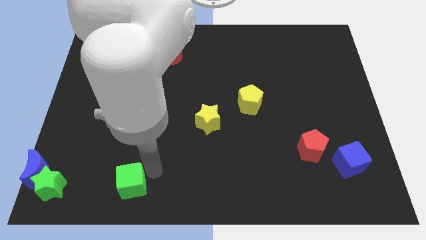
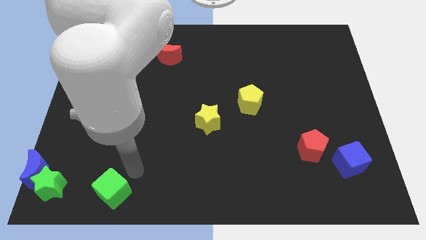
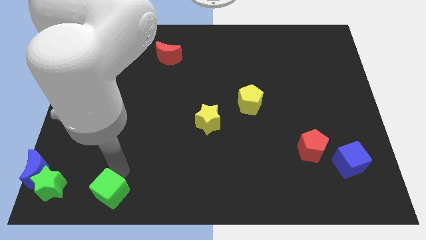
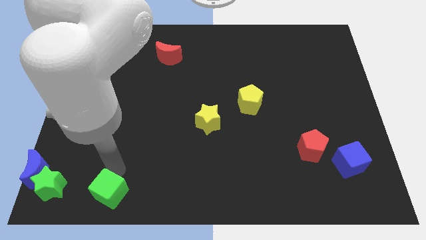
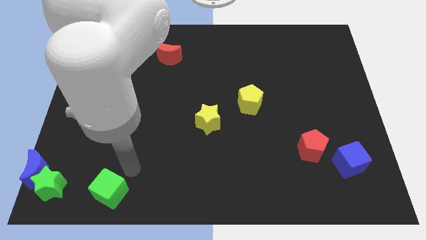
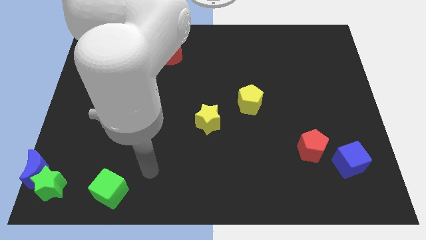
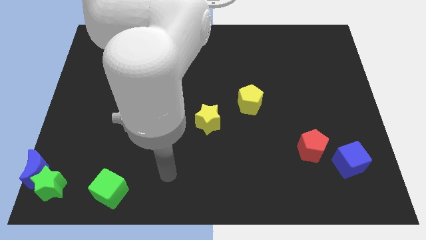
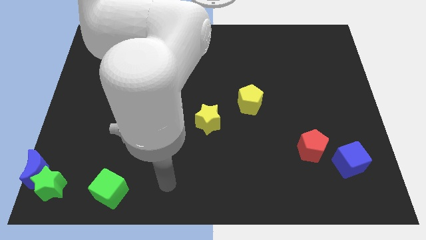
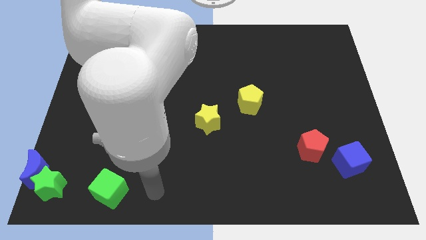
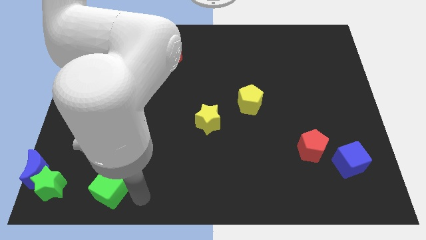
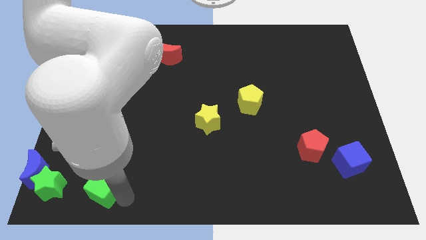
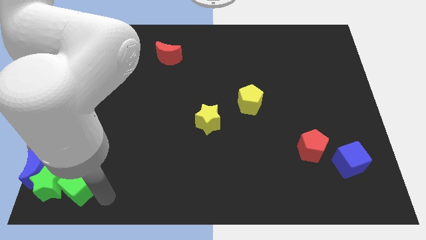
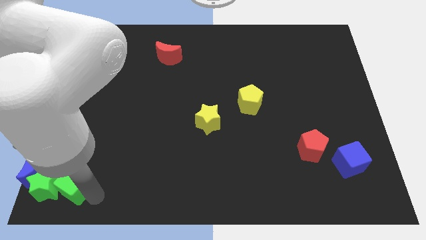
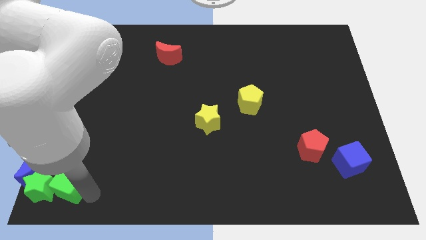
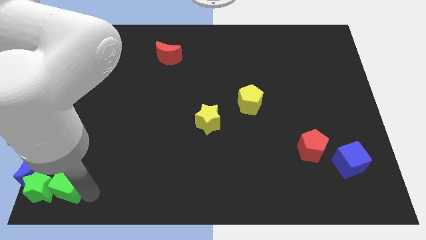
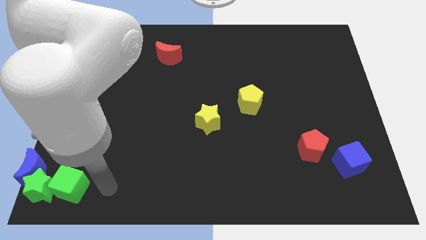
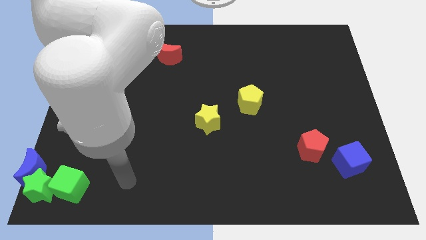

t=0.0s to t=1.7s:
move the green cube right to the green star

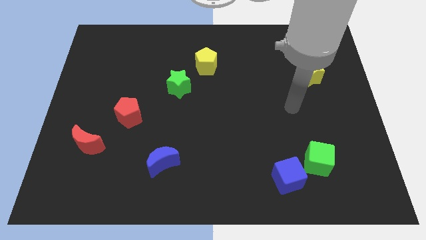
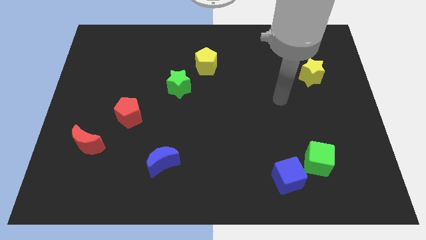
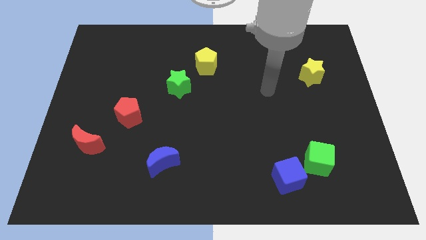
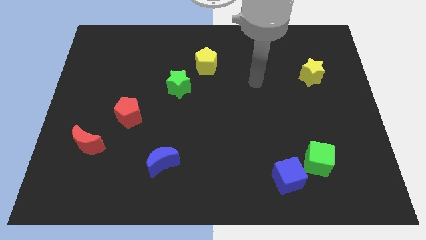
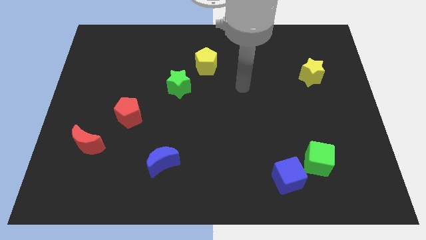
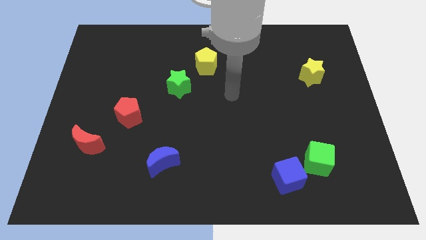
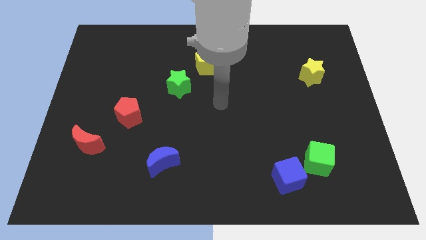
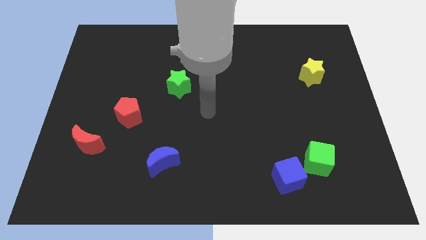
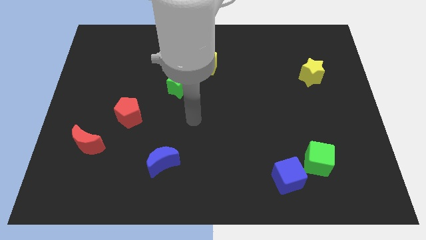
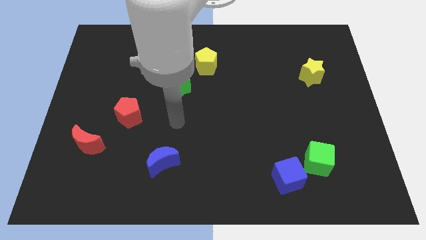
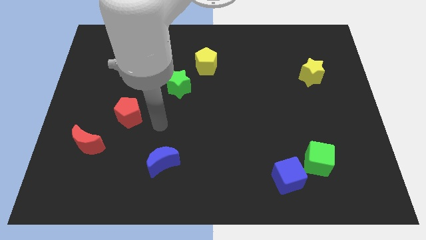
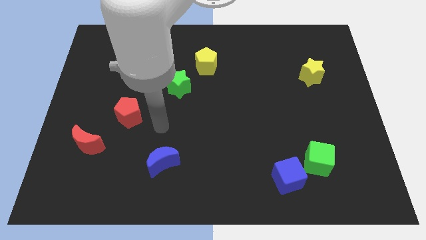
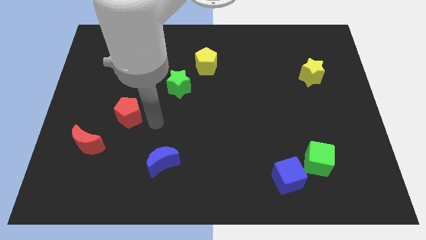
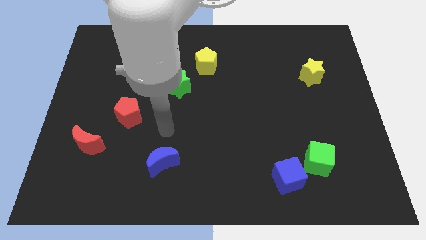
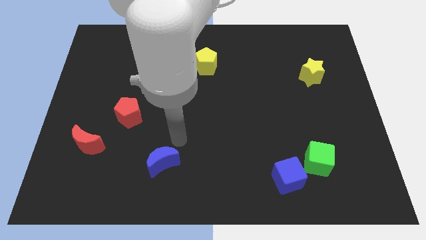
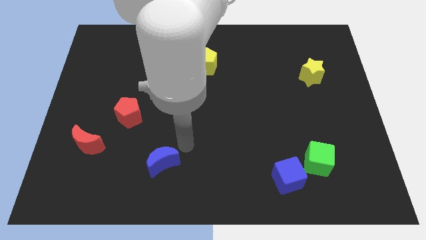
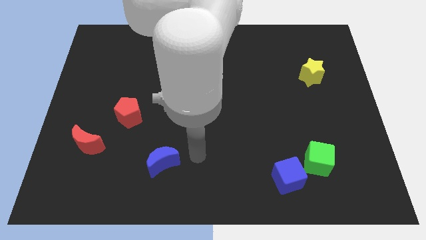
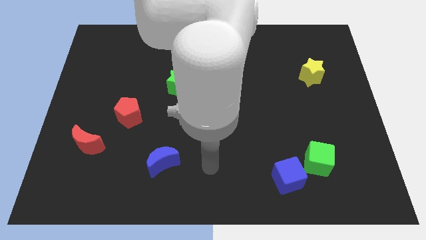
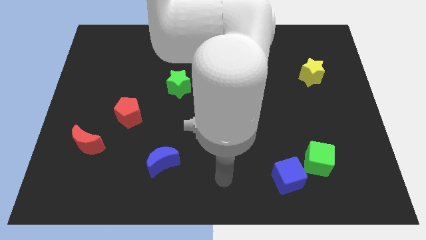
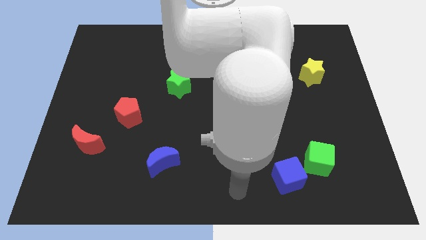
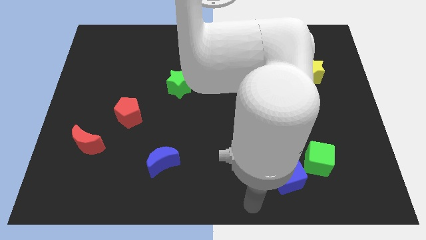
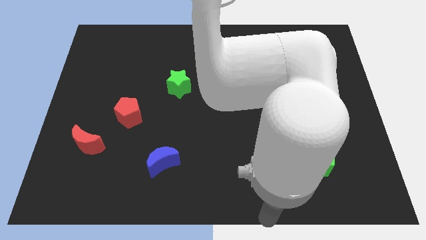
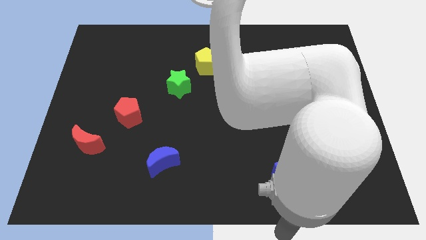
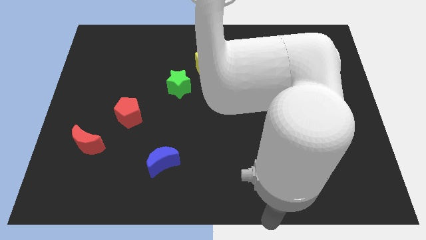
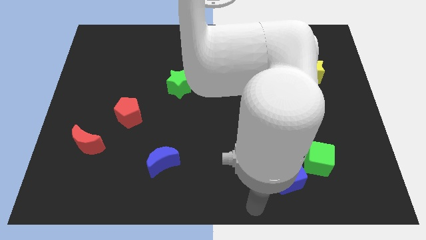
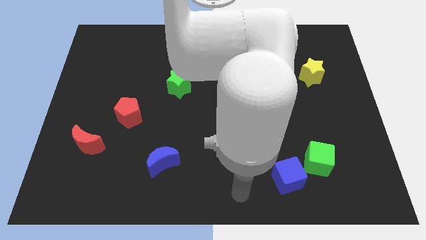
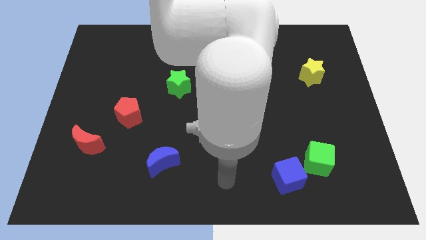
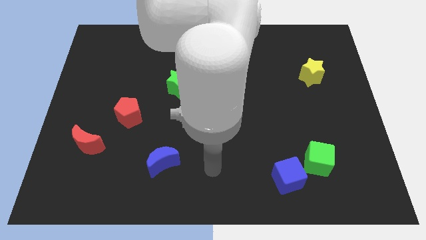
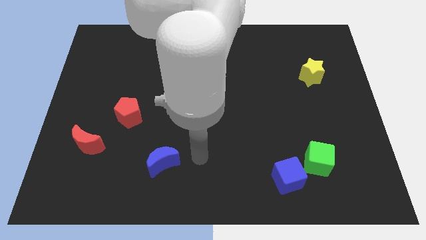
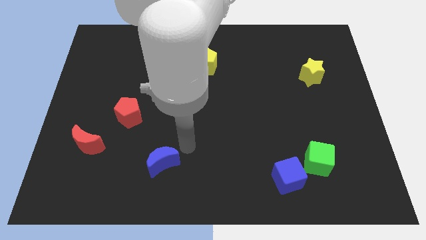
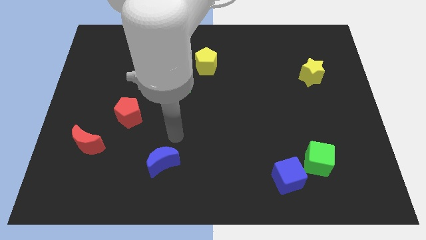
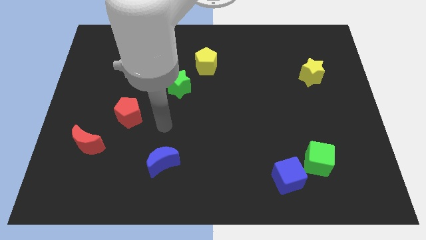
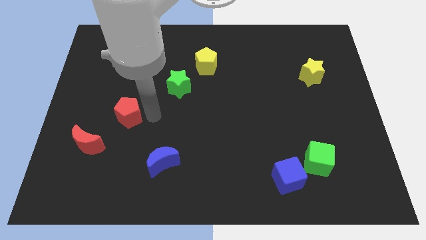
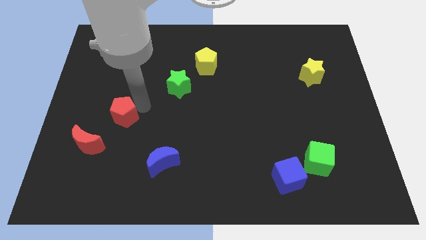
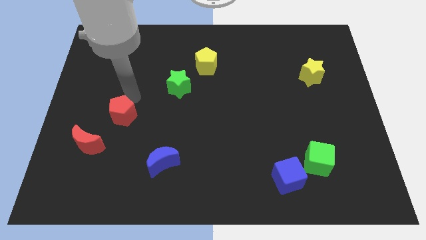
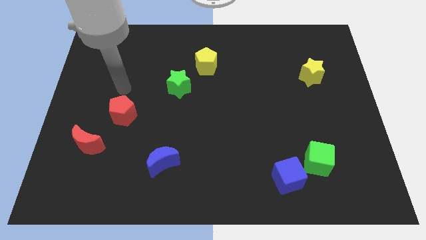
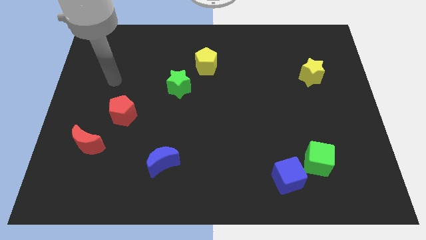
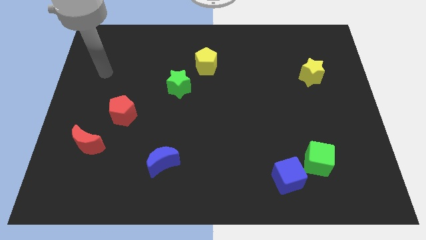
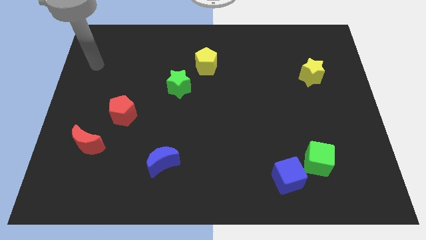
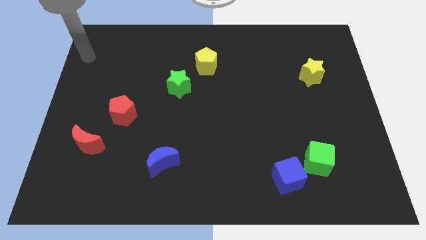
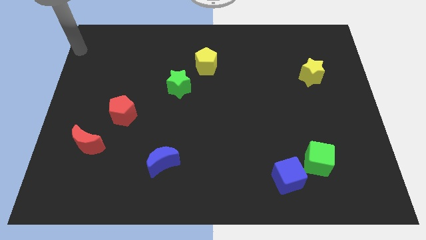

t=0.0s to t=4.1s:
move your arm to the top left corner

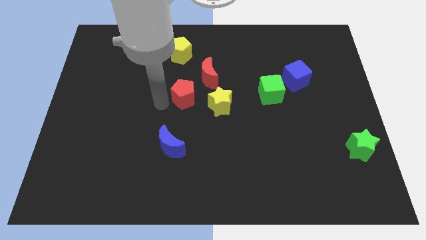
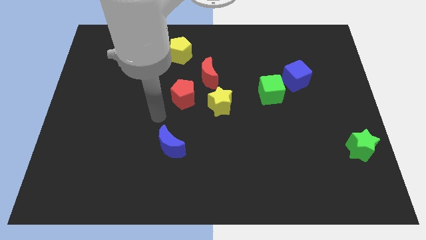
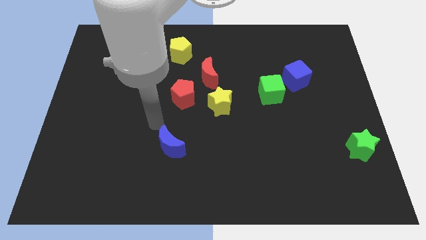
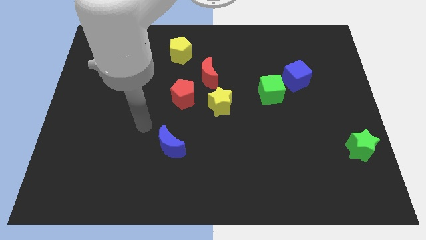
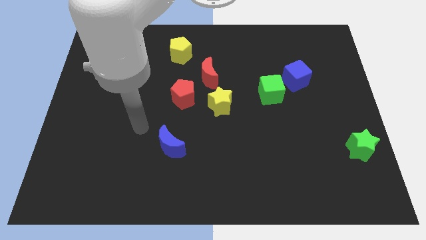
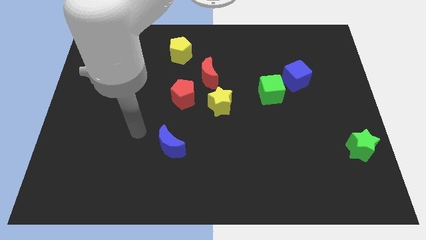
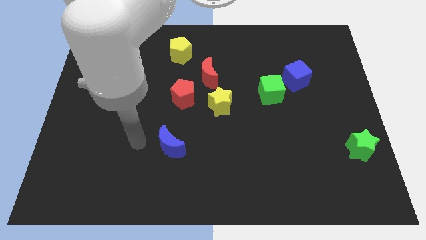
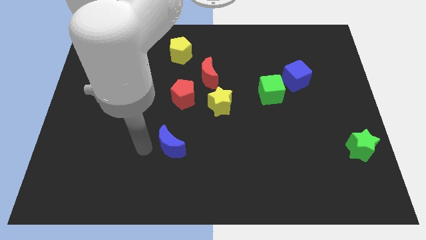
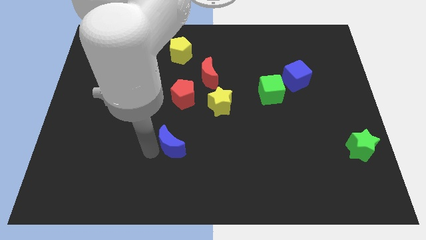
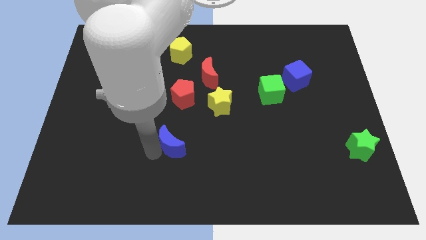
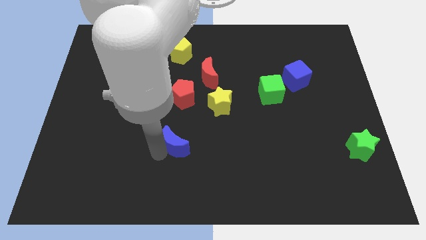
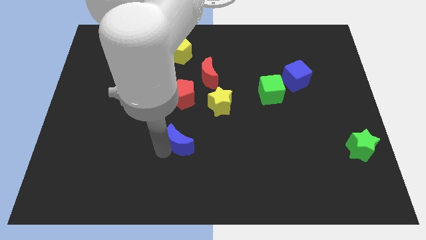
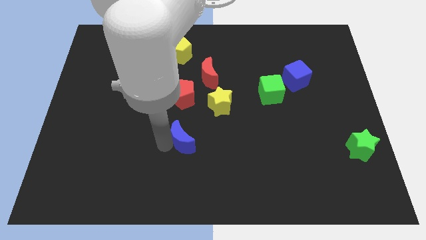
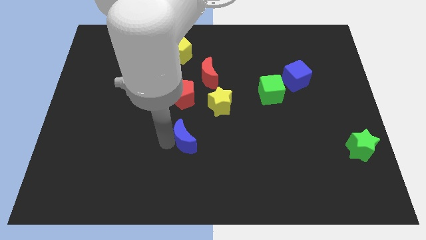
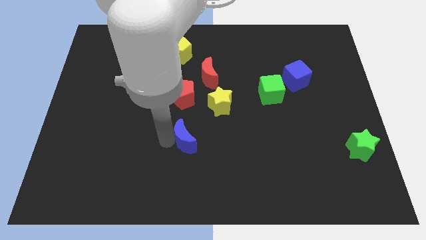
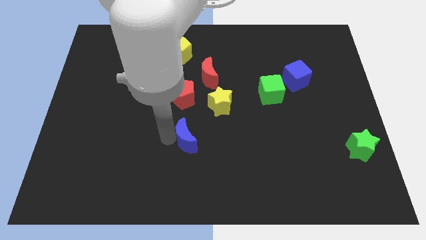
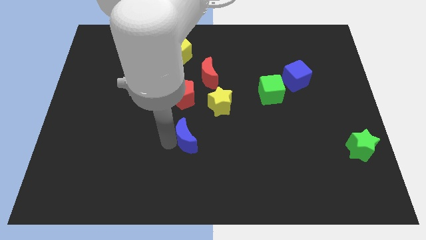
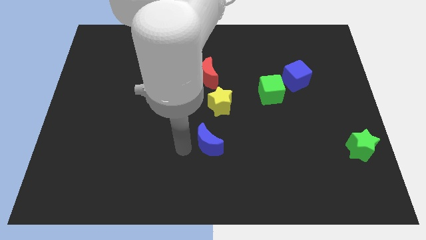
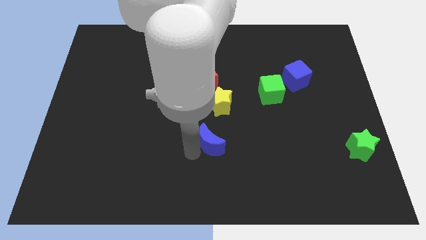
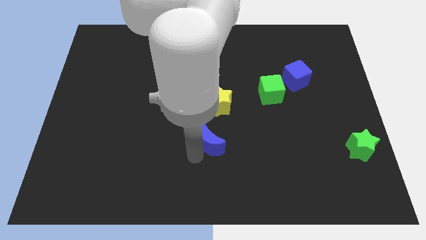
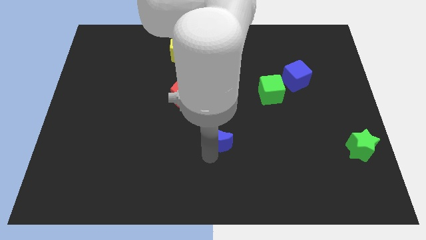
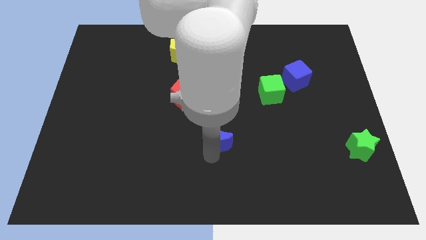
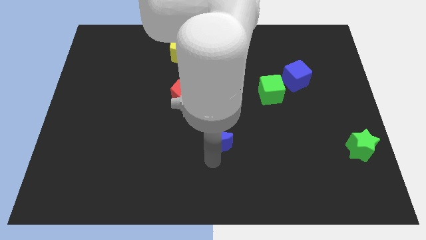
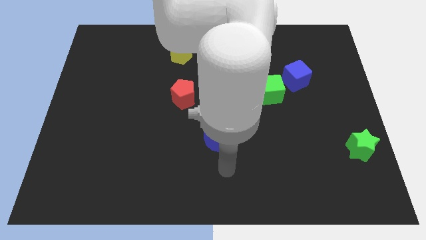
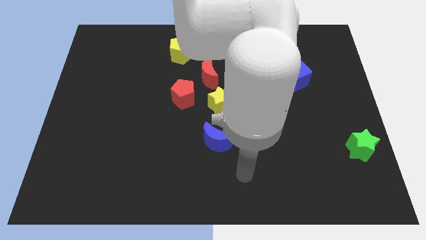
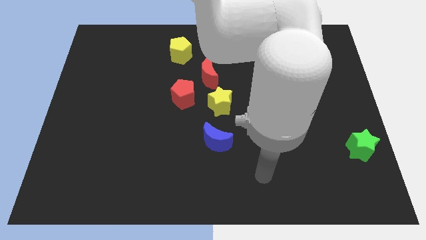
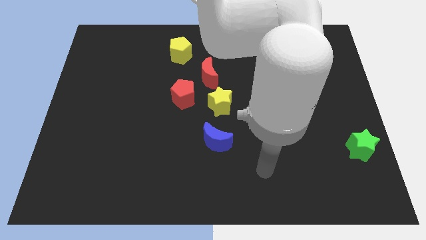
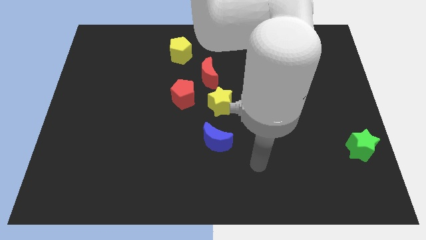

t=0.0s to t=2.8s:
push the blue crescent to the bottom of the yellow star

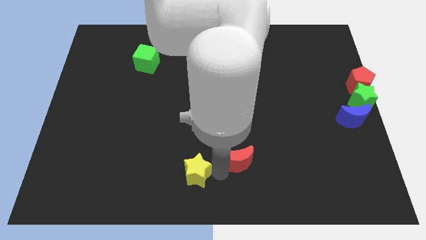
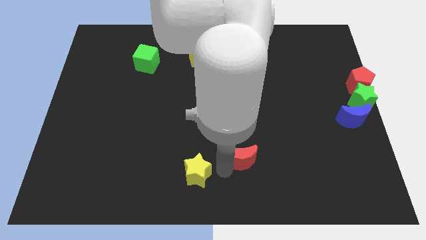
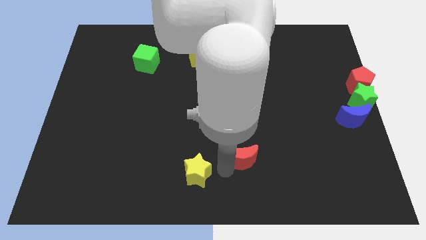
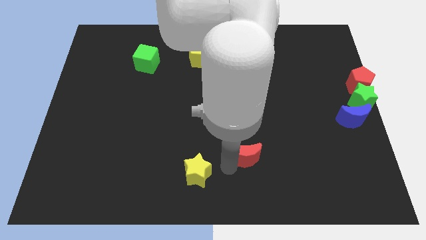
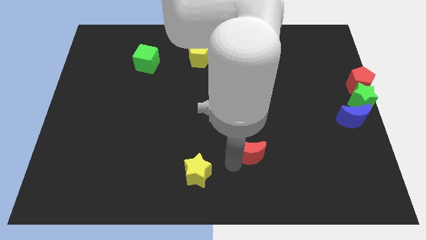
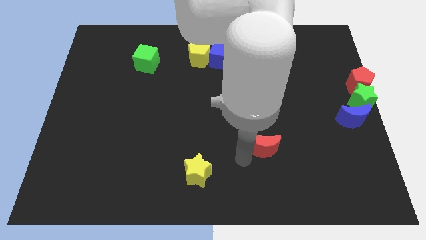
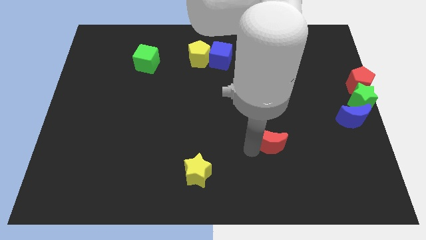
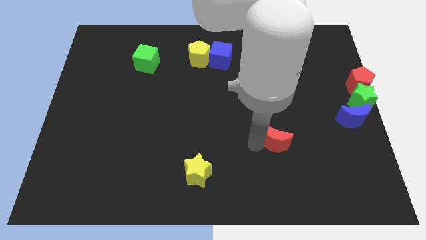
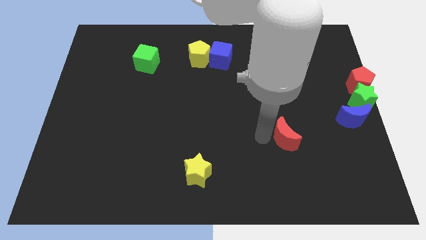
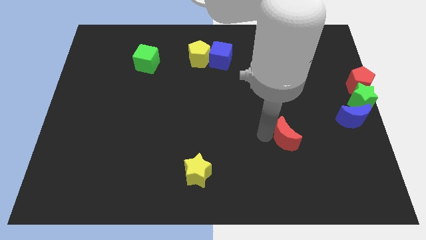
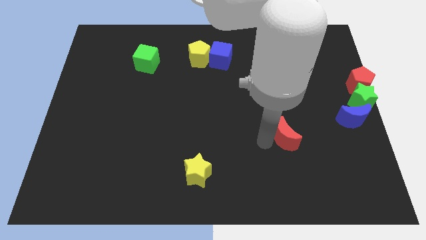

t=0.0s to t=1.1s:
separate red moon away from yellow star
